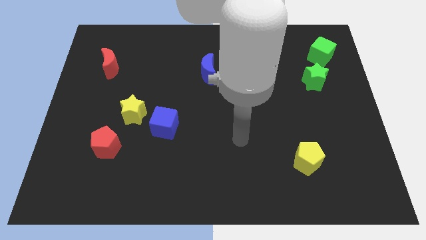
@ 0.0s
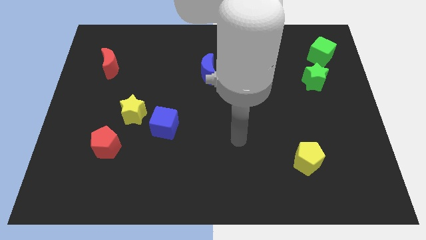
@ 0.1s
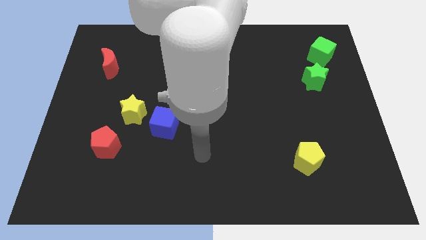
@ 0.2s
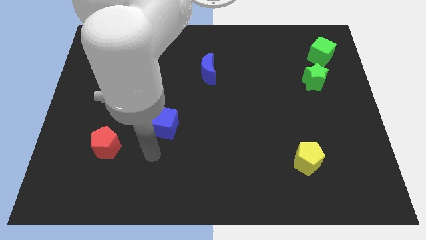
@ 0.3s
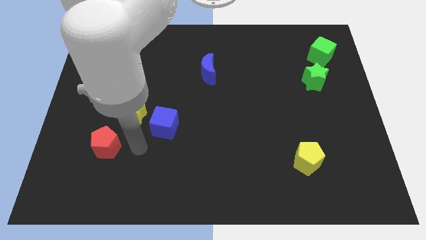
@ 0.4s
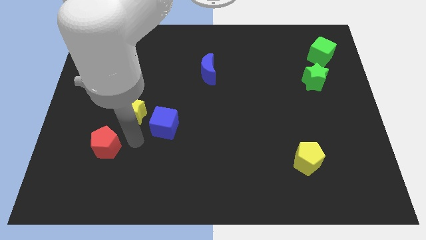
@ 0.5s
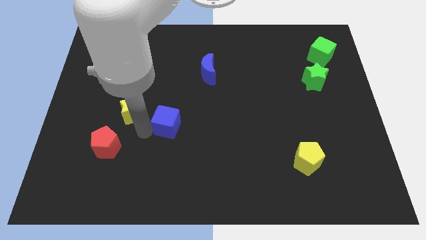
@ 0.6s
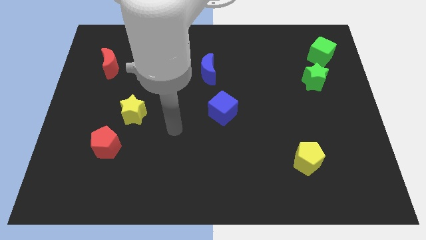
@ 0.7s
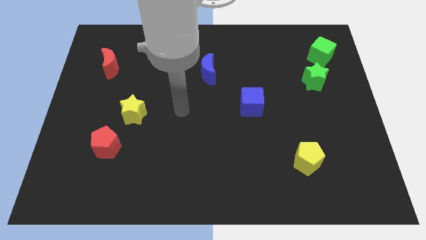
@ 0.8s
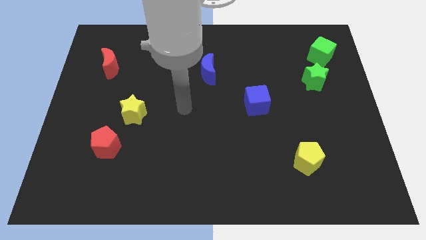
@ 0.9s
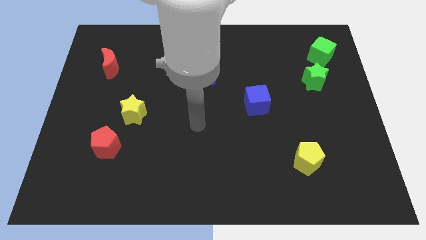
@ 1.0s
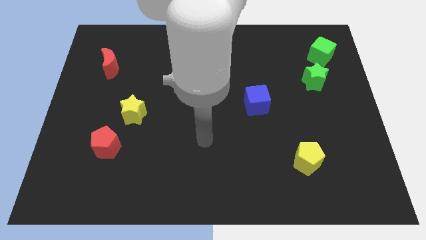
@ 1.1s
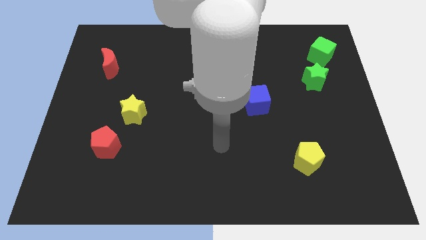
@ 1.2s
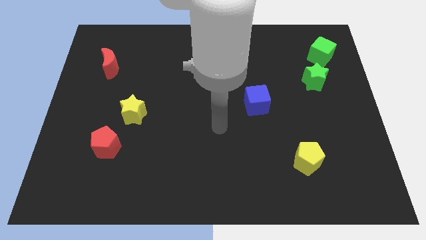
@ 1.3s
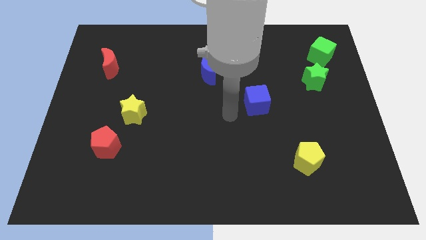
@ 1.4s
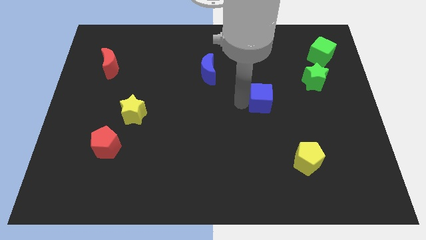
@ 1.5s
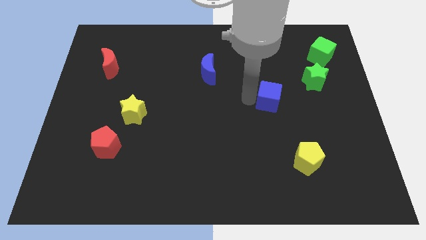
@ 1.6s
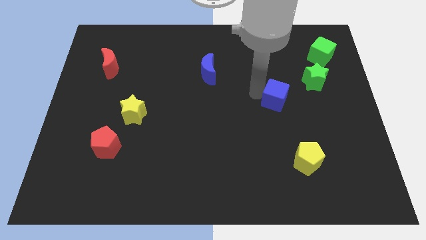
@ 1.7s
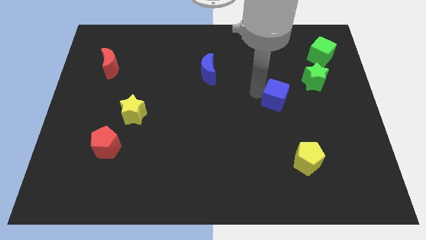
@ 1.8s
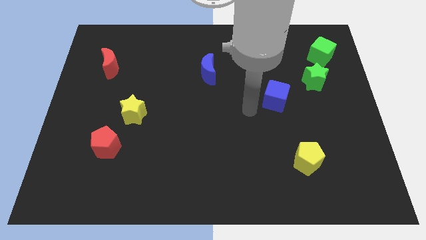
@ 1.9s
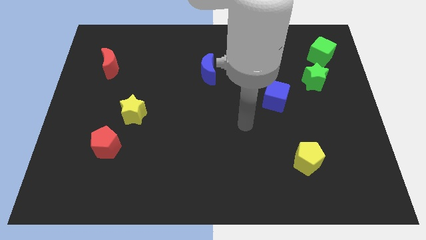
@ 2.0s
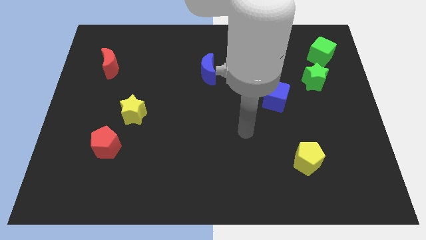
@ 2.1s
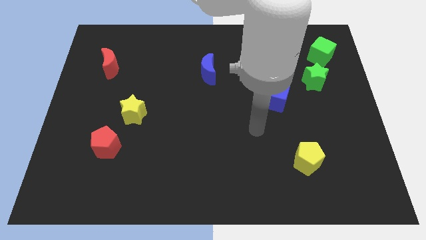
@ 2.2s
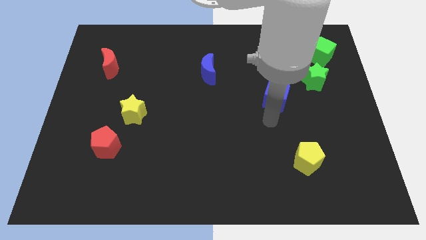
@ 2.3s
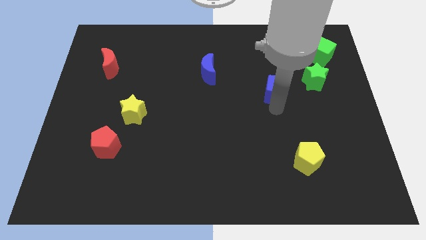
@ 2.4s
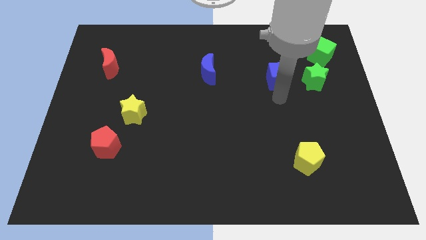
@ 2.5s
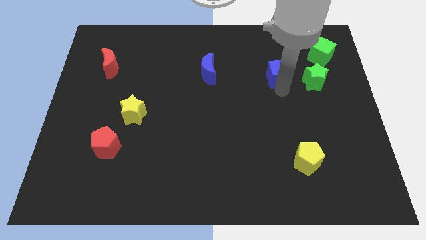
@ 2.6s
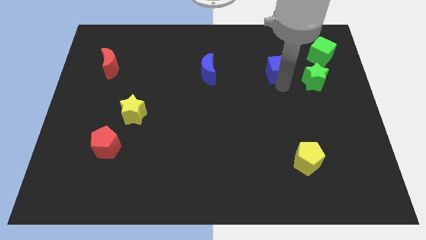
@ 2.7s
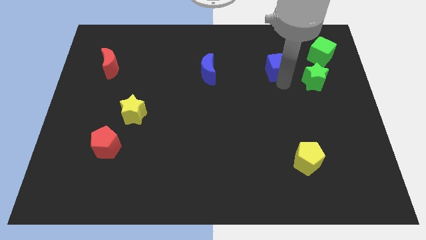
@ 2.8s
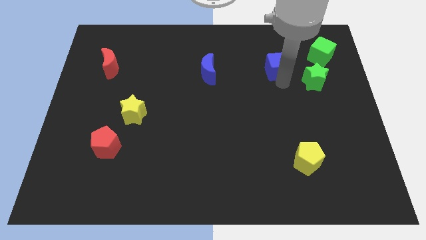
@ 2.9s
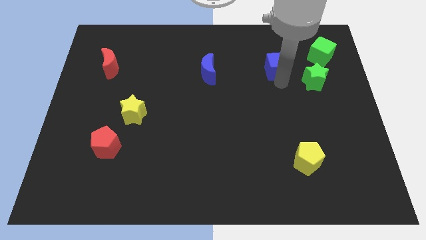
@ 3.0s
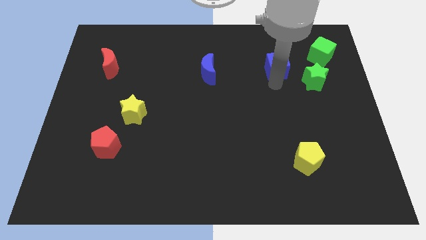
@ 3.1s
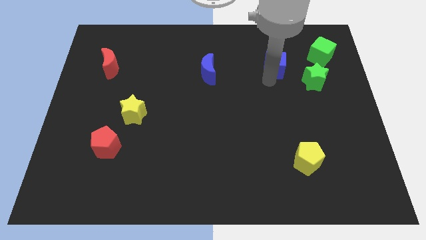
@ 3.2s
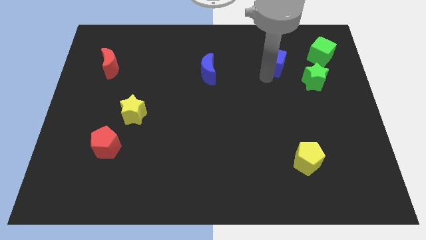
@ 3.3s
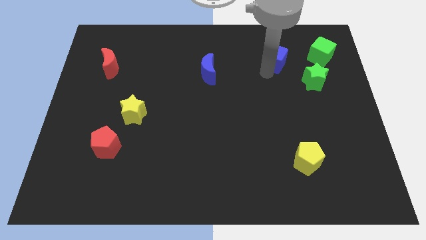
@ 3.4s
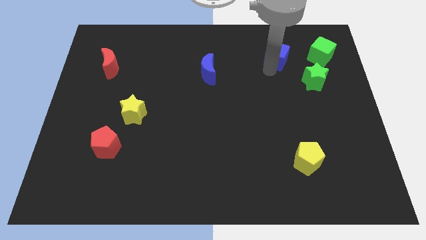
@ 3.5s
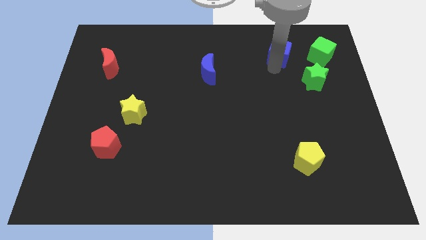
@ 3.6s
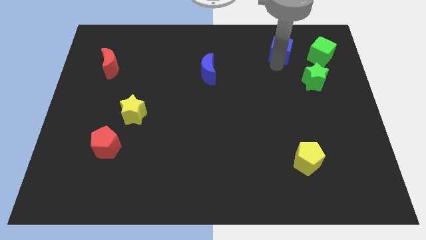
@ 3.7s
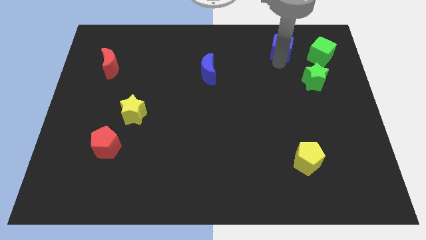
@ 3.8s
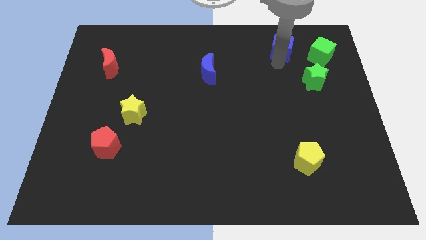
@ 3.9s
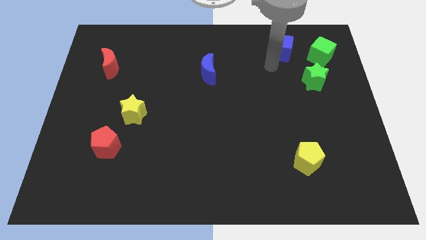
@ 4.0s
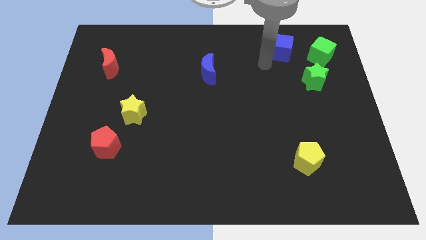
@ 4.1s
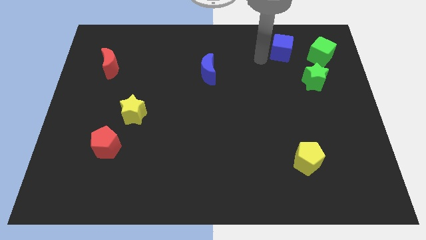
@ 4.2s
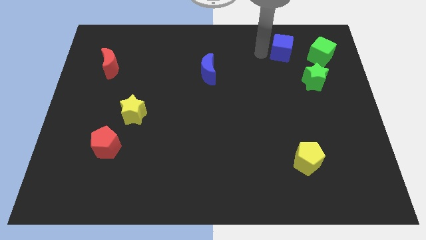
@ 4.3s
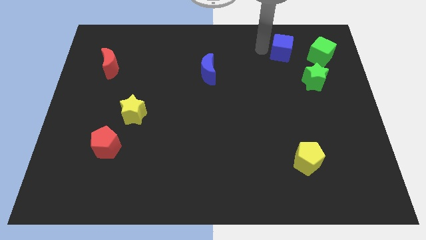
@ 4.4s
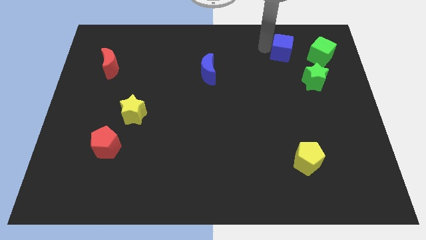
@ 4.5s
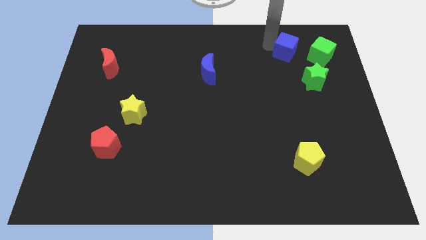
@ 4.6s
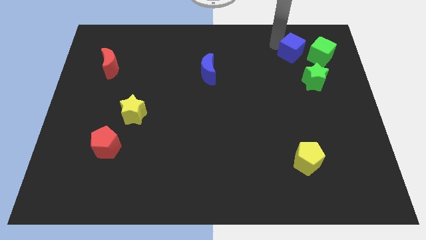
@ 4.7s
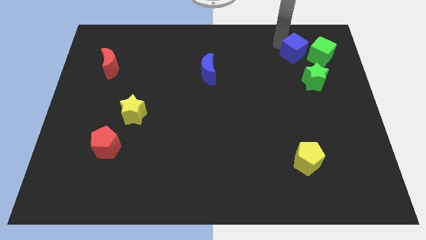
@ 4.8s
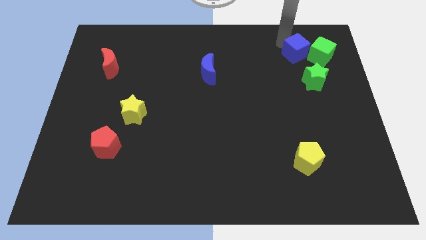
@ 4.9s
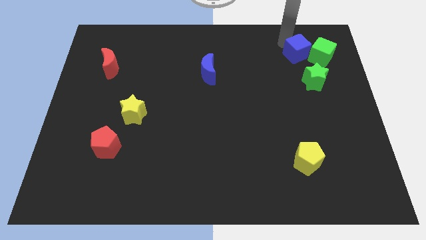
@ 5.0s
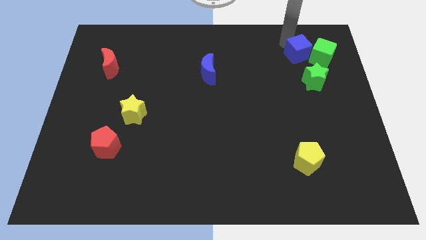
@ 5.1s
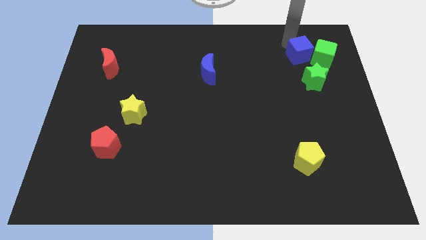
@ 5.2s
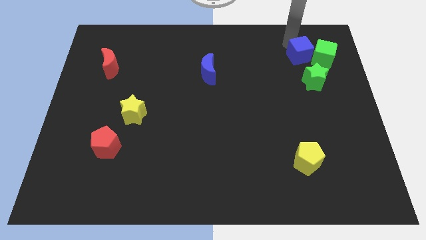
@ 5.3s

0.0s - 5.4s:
push the blue cube to the green cube

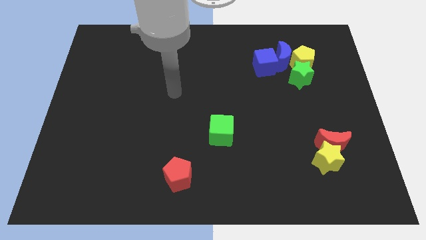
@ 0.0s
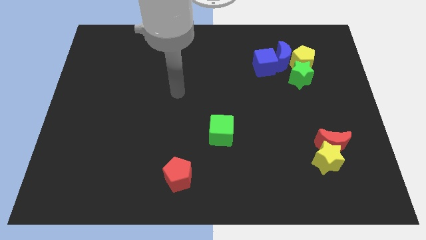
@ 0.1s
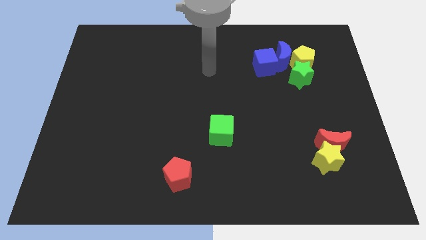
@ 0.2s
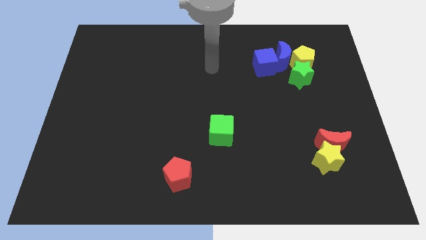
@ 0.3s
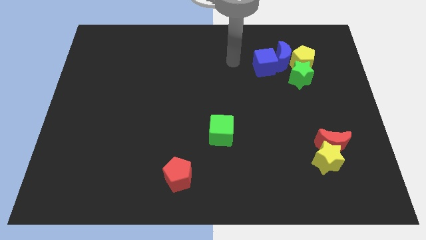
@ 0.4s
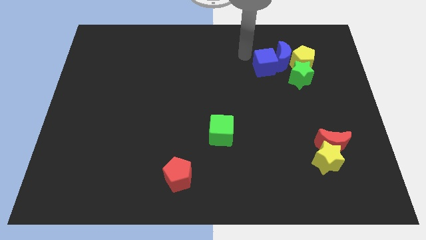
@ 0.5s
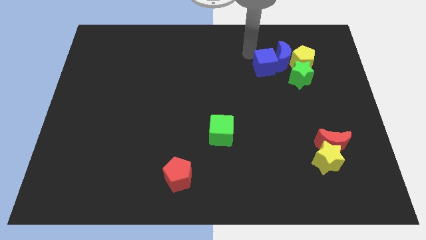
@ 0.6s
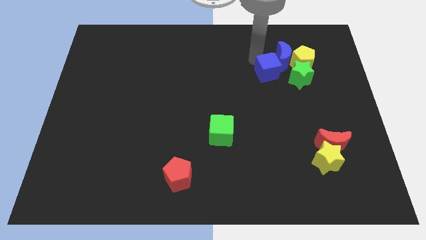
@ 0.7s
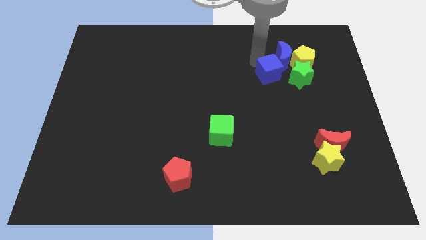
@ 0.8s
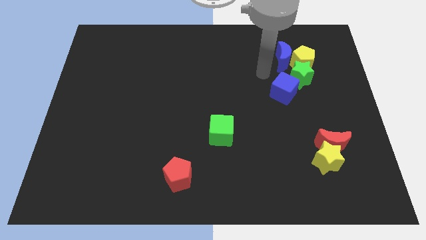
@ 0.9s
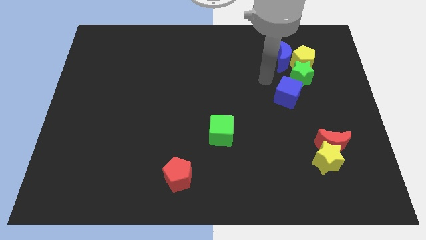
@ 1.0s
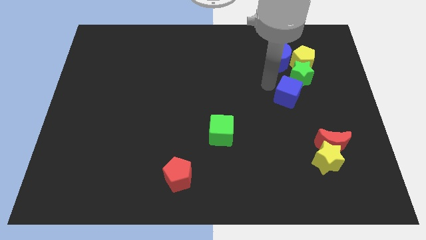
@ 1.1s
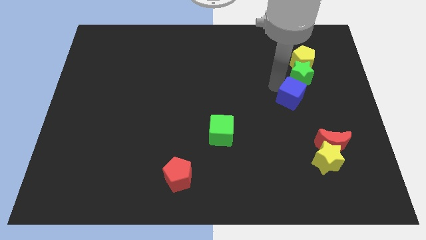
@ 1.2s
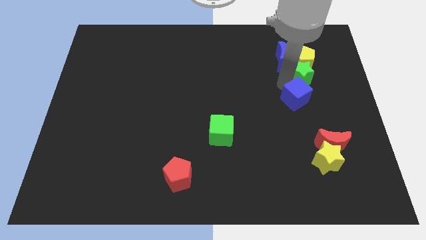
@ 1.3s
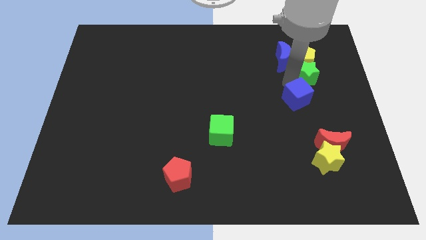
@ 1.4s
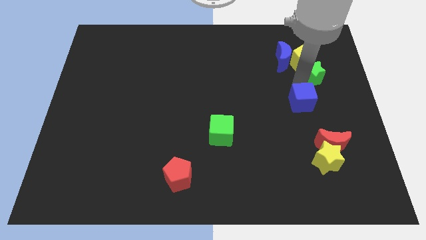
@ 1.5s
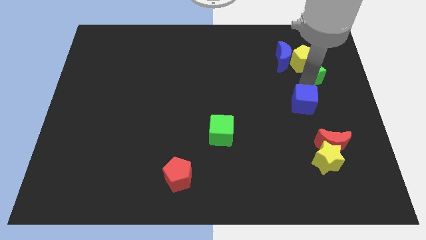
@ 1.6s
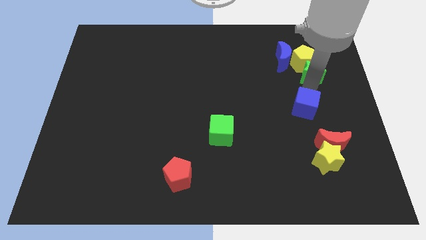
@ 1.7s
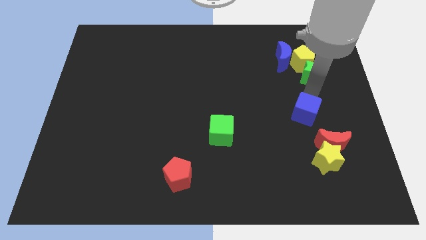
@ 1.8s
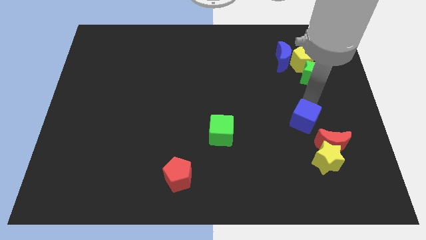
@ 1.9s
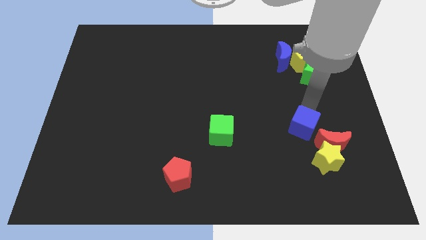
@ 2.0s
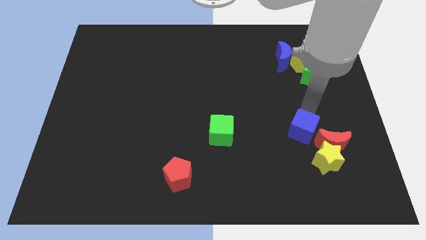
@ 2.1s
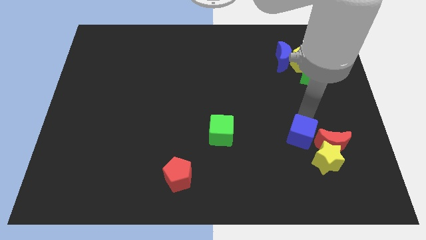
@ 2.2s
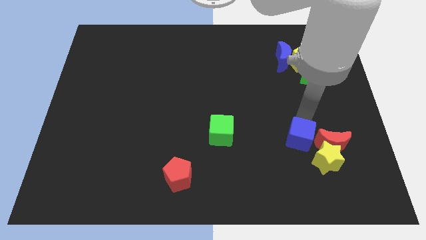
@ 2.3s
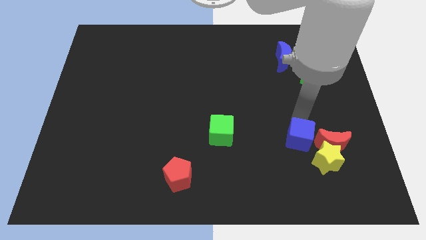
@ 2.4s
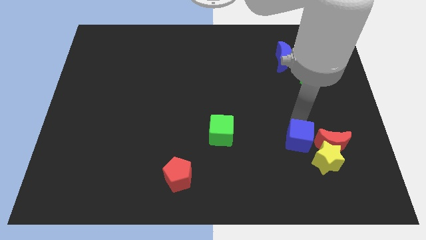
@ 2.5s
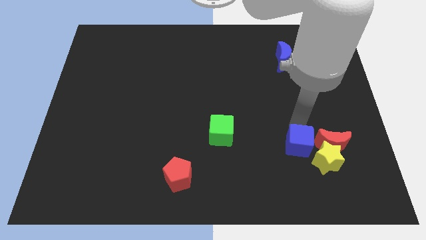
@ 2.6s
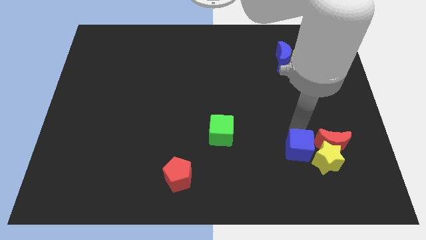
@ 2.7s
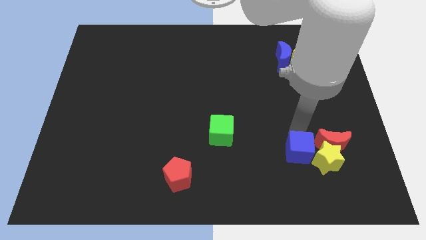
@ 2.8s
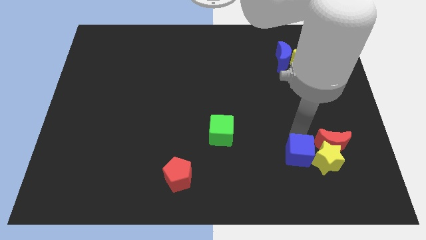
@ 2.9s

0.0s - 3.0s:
slide the blue cube close to the yellow star

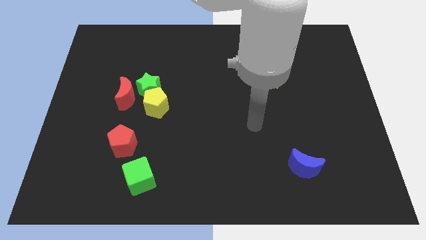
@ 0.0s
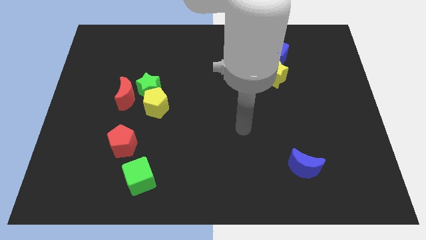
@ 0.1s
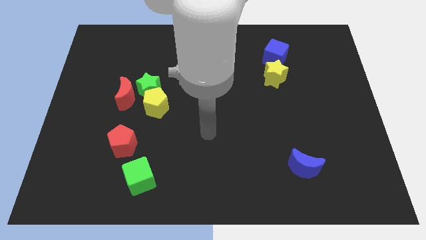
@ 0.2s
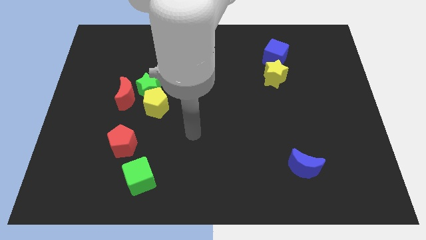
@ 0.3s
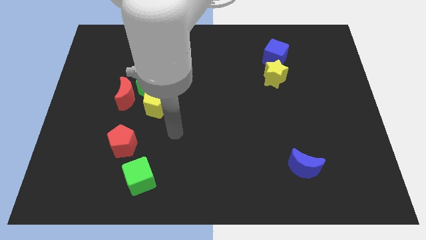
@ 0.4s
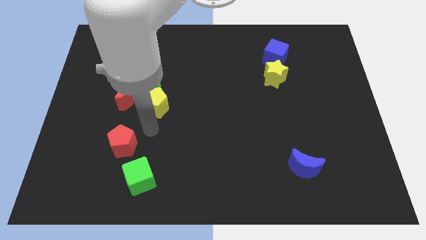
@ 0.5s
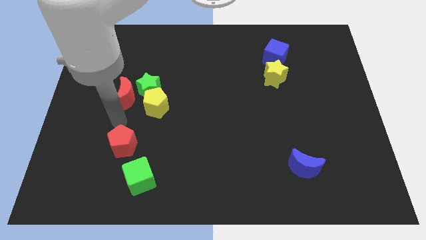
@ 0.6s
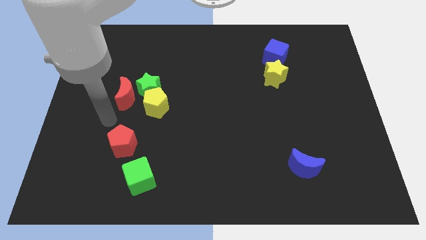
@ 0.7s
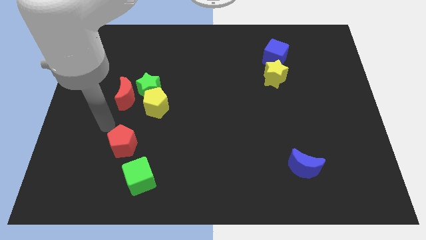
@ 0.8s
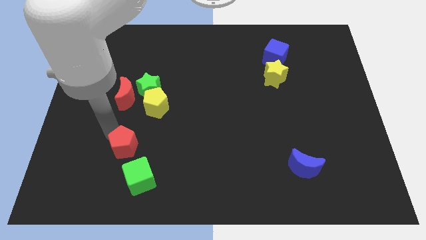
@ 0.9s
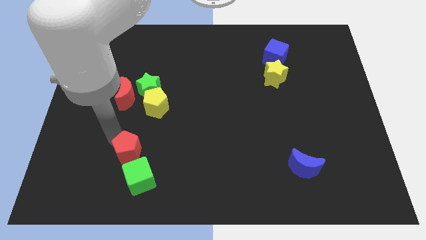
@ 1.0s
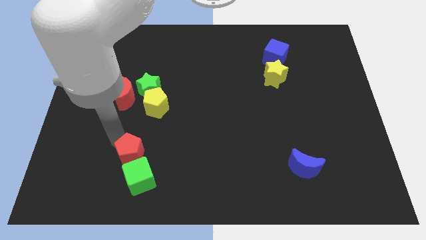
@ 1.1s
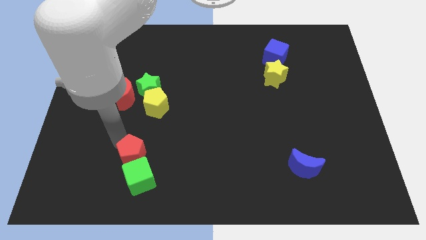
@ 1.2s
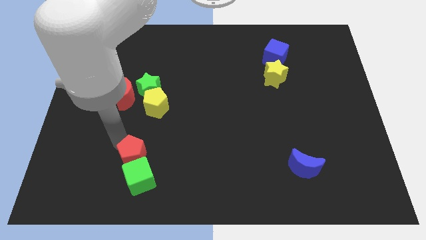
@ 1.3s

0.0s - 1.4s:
move the red pentagon towards the green cube
